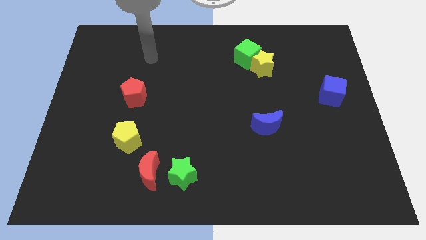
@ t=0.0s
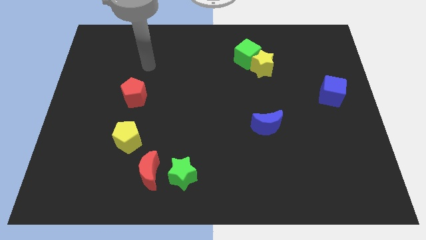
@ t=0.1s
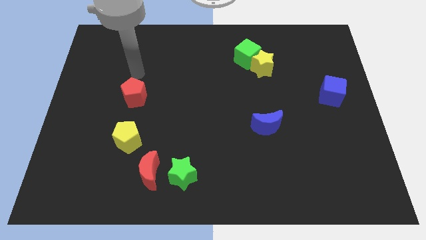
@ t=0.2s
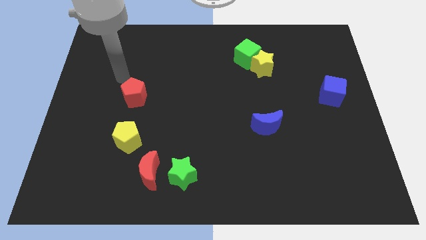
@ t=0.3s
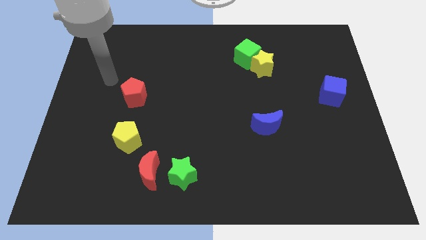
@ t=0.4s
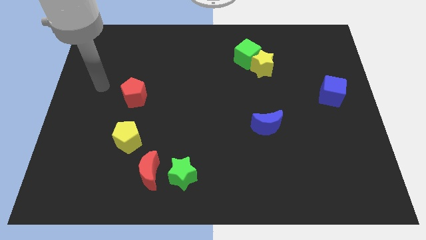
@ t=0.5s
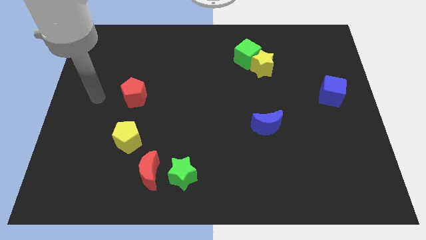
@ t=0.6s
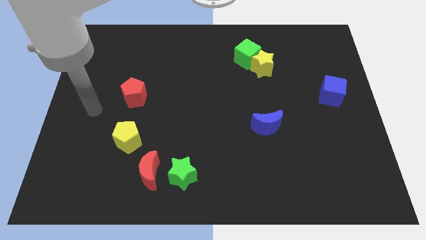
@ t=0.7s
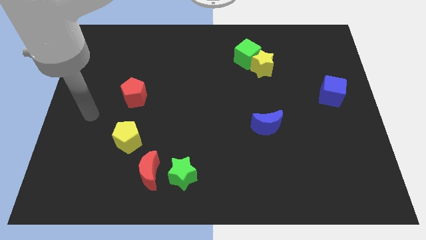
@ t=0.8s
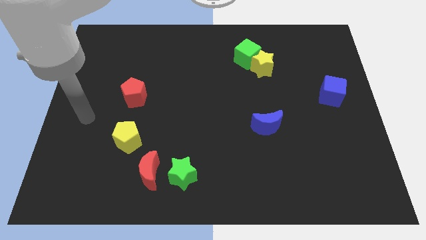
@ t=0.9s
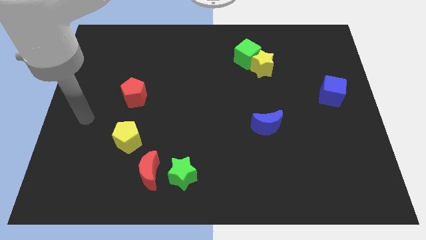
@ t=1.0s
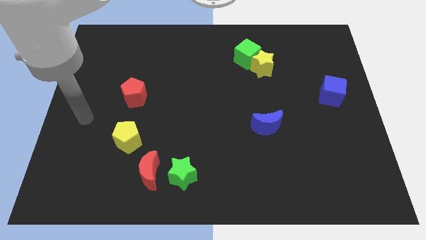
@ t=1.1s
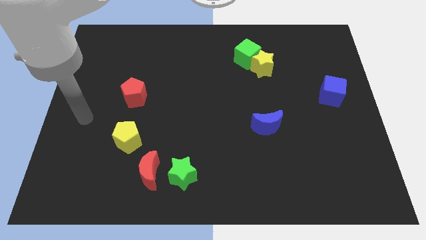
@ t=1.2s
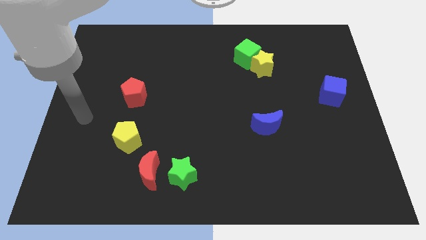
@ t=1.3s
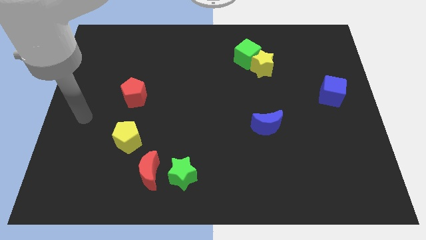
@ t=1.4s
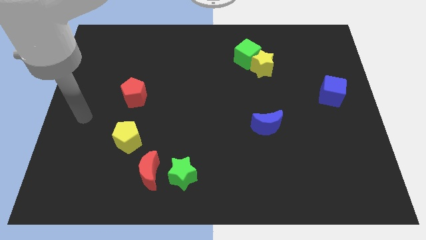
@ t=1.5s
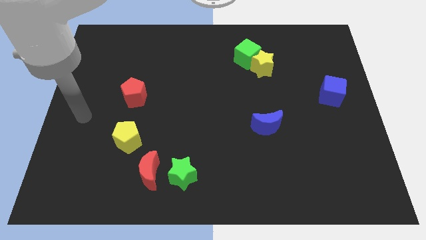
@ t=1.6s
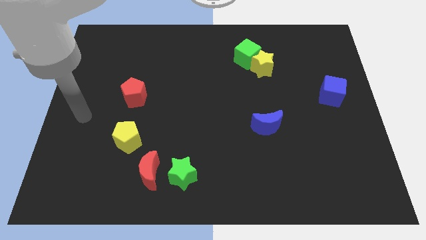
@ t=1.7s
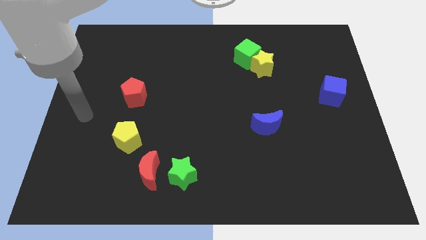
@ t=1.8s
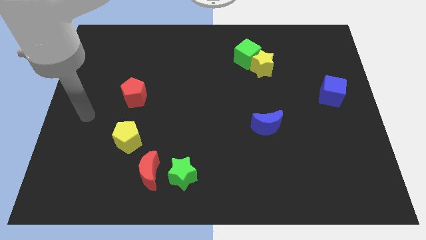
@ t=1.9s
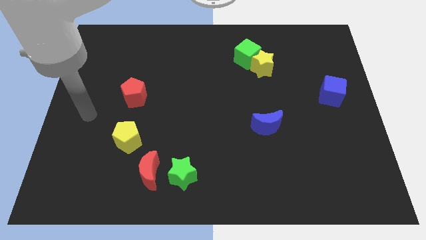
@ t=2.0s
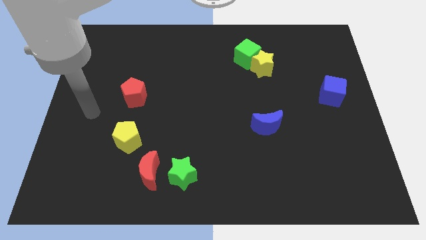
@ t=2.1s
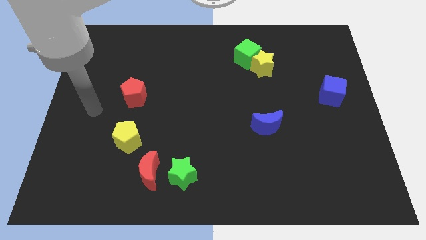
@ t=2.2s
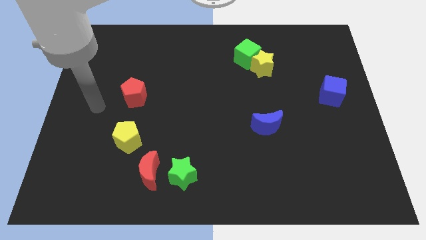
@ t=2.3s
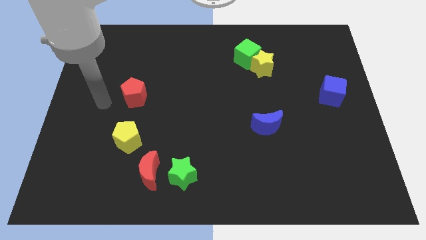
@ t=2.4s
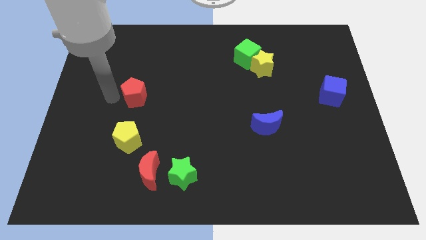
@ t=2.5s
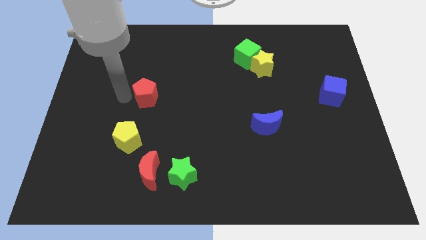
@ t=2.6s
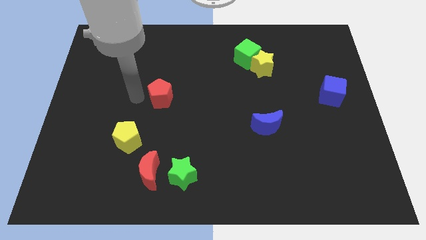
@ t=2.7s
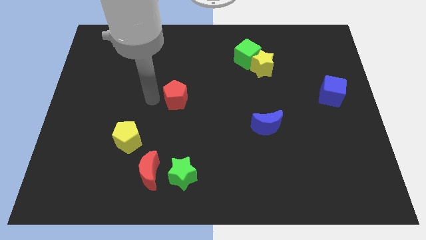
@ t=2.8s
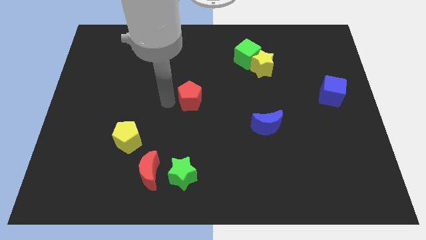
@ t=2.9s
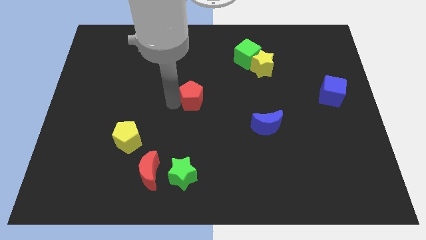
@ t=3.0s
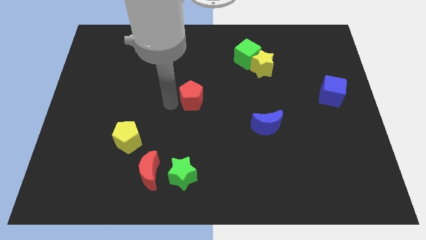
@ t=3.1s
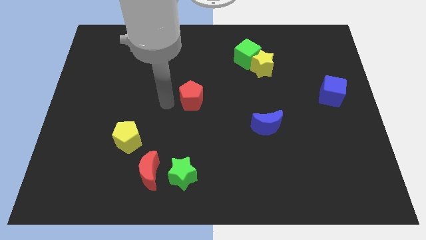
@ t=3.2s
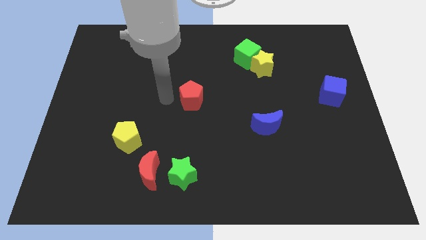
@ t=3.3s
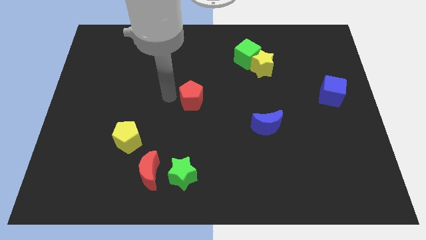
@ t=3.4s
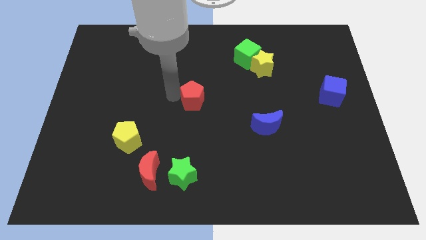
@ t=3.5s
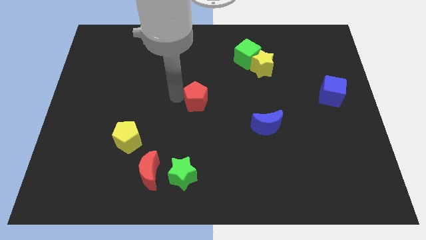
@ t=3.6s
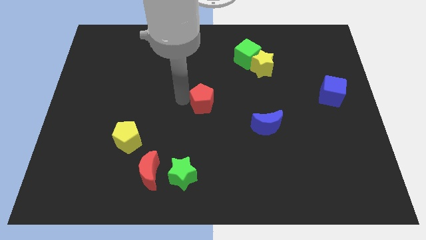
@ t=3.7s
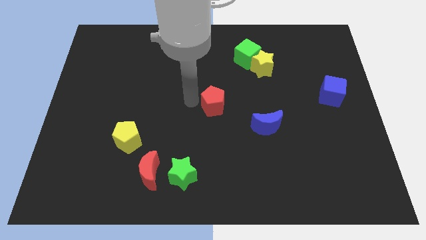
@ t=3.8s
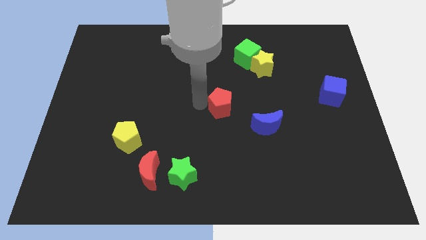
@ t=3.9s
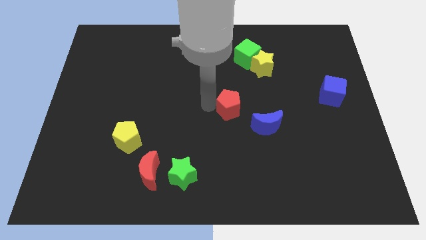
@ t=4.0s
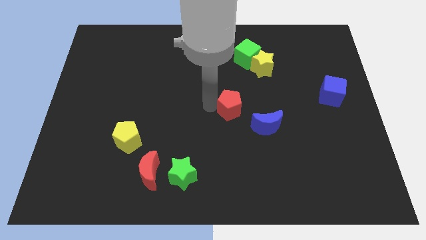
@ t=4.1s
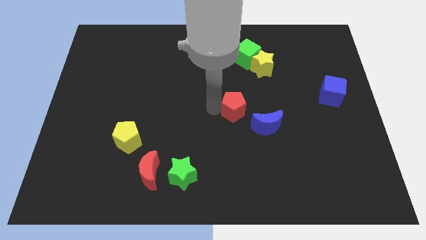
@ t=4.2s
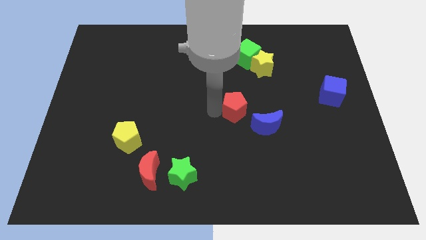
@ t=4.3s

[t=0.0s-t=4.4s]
place the red pentagon at the center

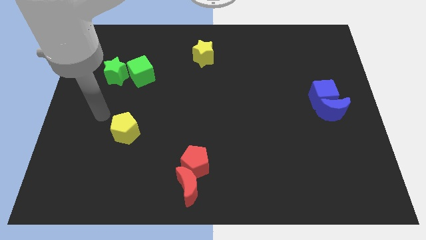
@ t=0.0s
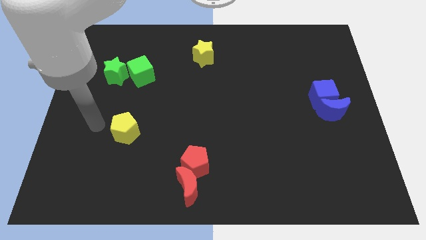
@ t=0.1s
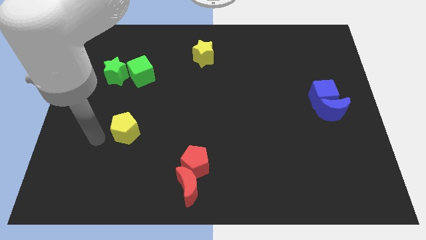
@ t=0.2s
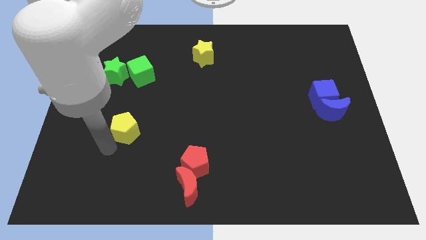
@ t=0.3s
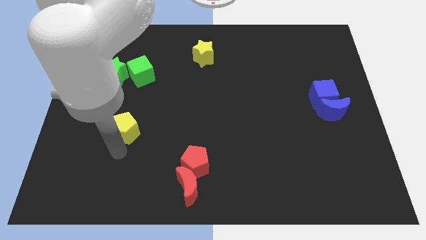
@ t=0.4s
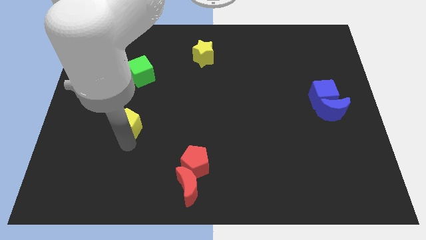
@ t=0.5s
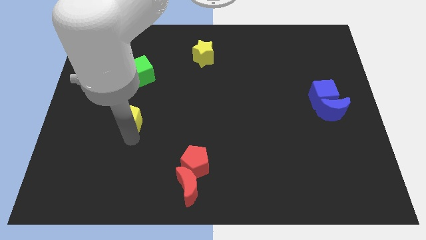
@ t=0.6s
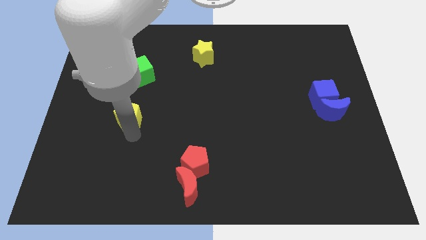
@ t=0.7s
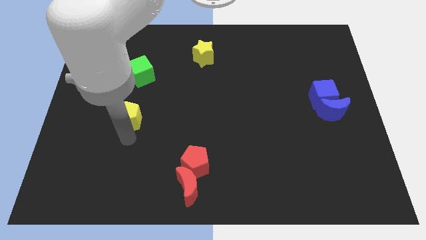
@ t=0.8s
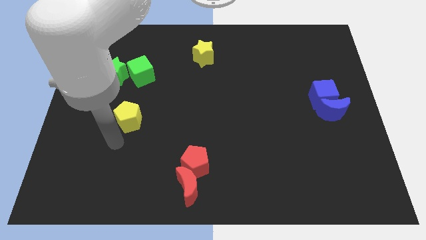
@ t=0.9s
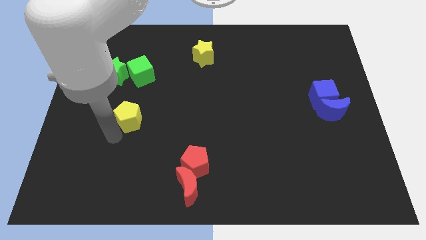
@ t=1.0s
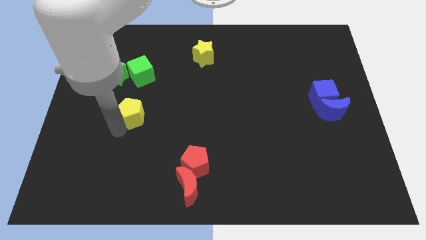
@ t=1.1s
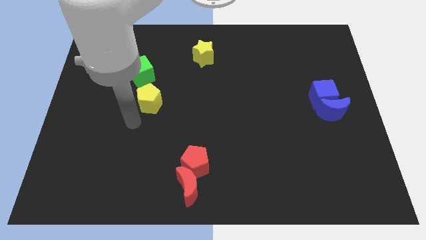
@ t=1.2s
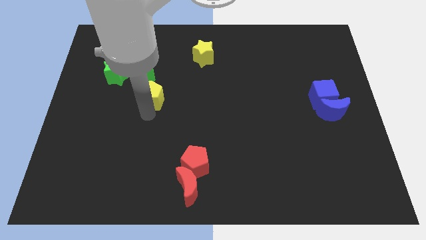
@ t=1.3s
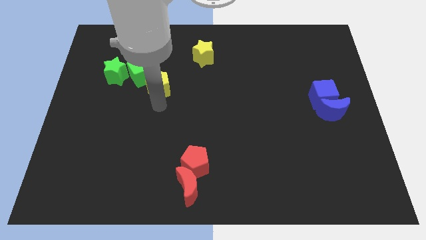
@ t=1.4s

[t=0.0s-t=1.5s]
put the yellow pentagon on the bottom side of the green cube

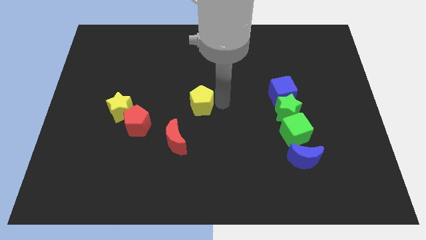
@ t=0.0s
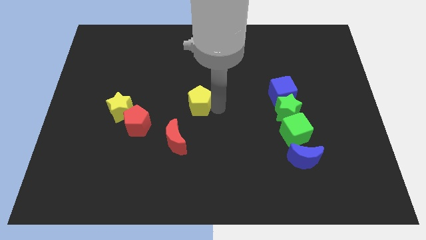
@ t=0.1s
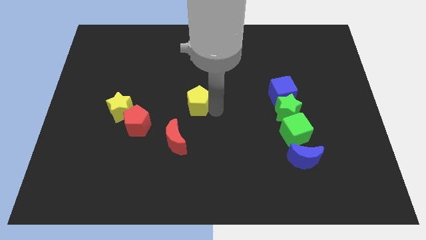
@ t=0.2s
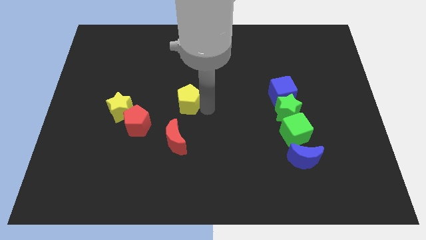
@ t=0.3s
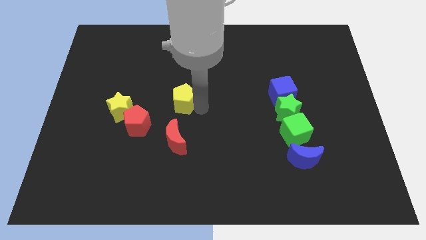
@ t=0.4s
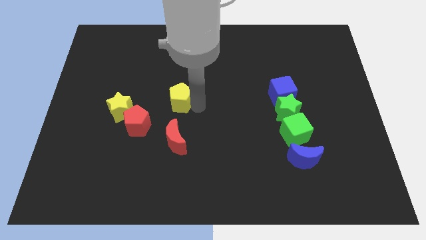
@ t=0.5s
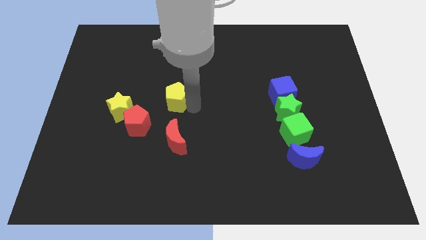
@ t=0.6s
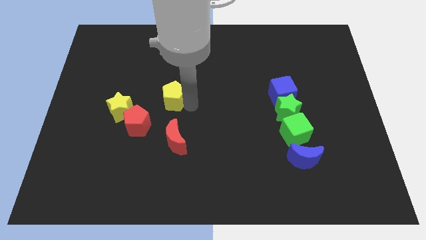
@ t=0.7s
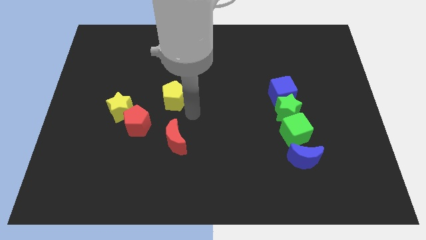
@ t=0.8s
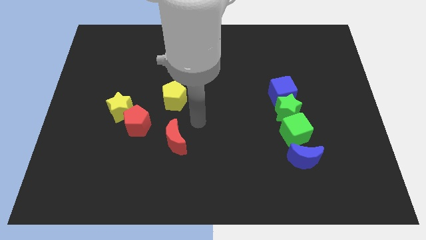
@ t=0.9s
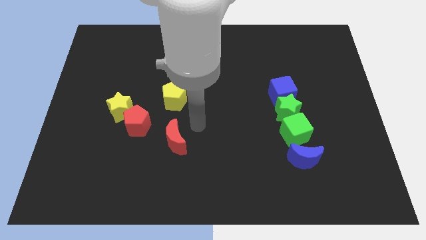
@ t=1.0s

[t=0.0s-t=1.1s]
slide yellow pentagon on top of red moon

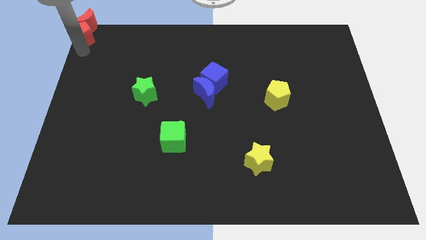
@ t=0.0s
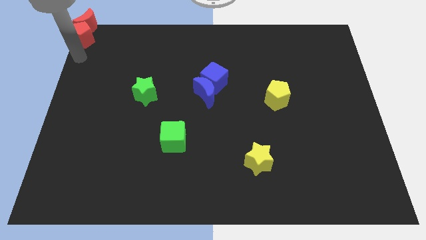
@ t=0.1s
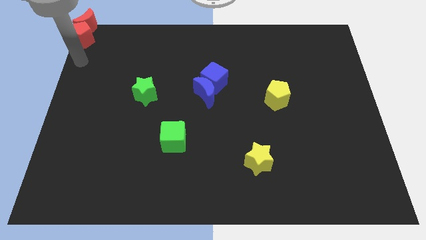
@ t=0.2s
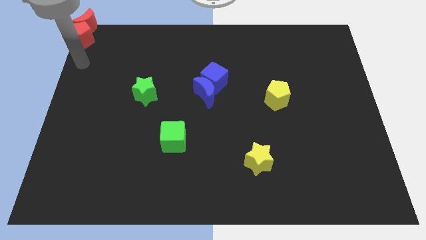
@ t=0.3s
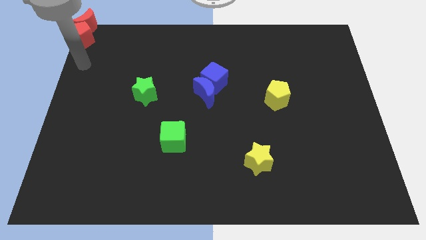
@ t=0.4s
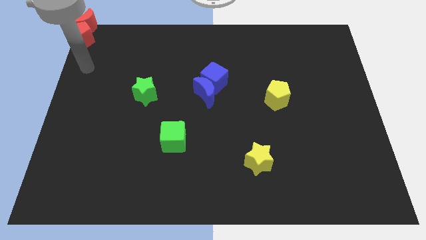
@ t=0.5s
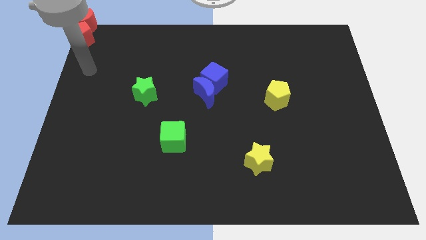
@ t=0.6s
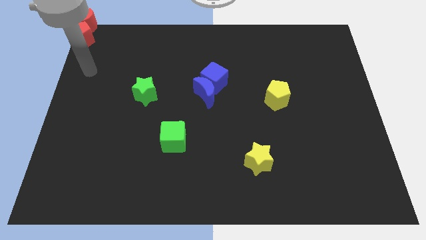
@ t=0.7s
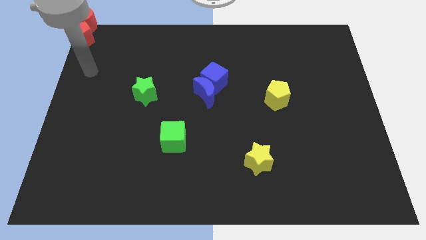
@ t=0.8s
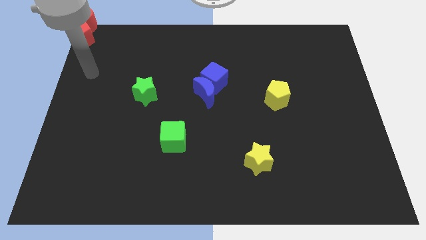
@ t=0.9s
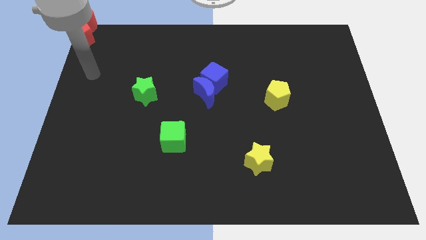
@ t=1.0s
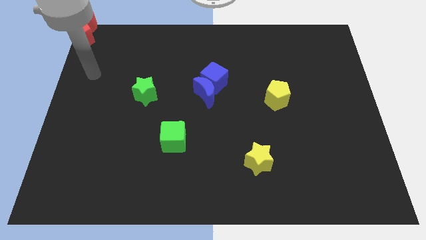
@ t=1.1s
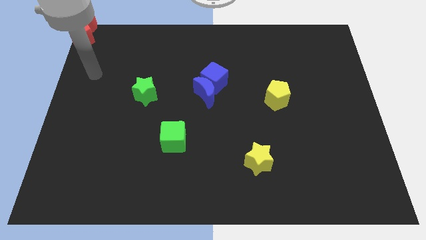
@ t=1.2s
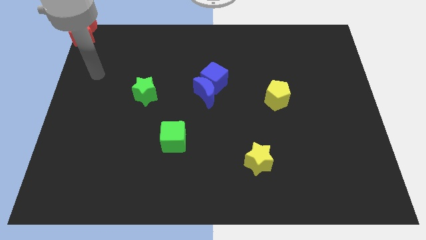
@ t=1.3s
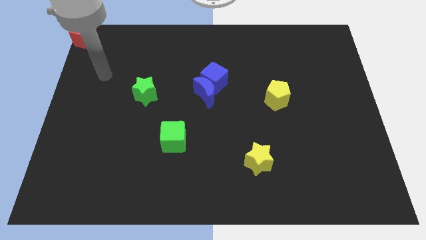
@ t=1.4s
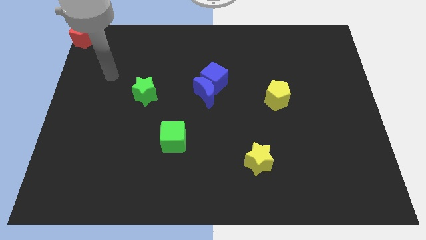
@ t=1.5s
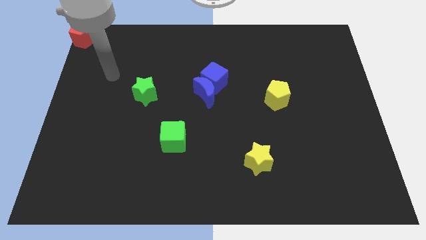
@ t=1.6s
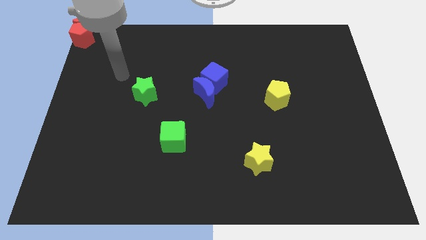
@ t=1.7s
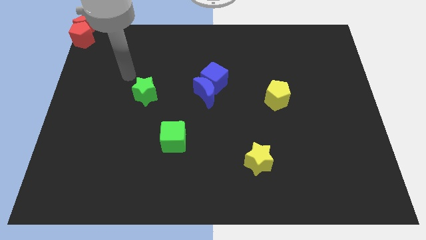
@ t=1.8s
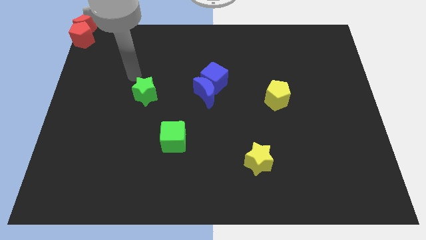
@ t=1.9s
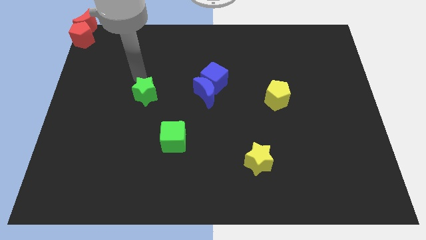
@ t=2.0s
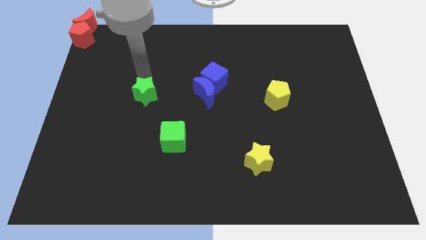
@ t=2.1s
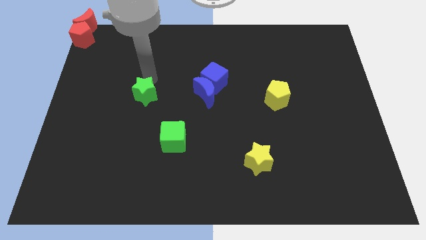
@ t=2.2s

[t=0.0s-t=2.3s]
move the arm above the green star
